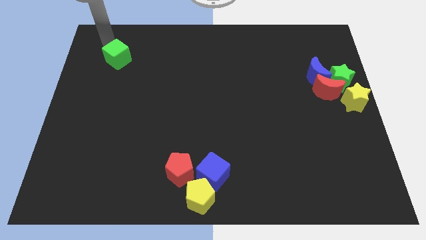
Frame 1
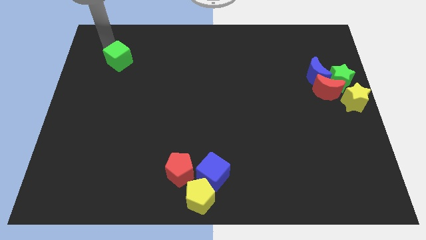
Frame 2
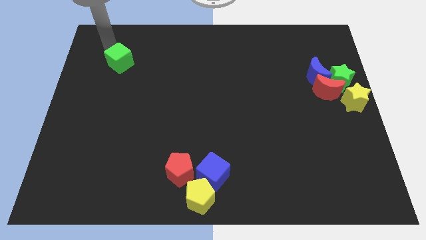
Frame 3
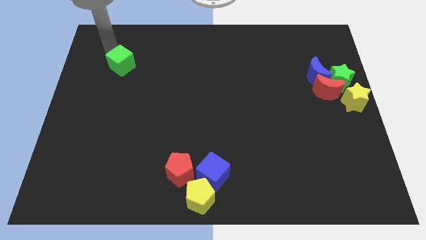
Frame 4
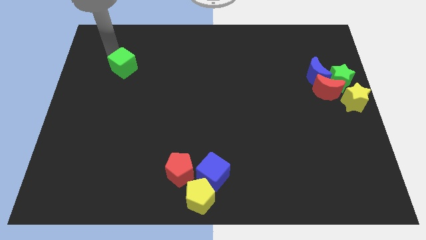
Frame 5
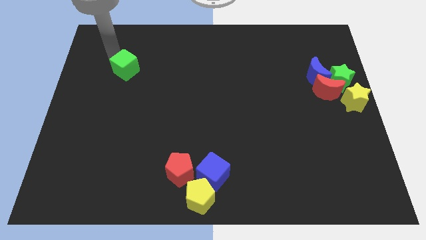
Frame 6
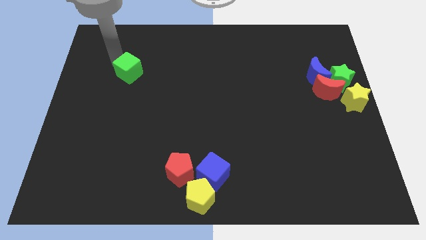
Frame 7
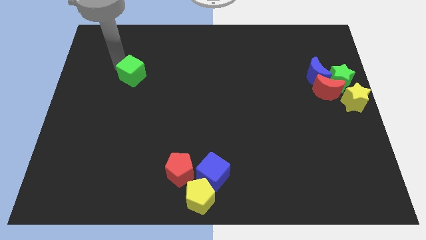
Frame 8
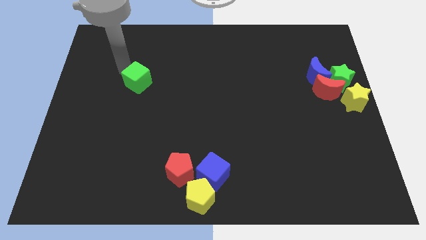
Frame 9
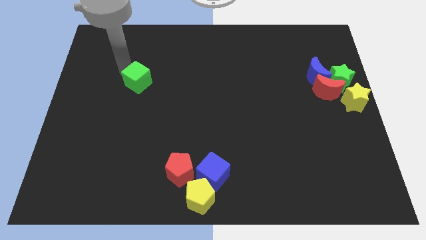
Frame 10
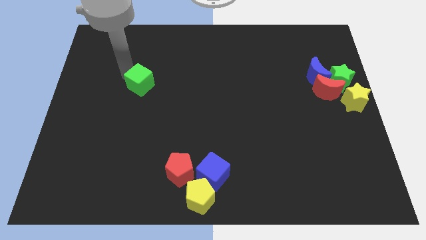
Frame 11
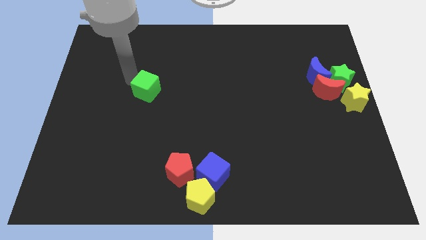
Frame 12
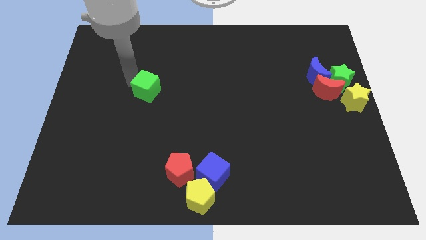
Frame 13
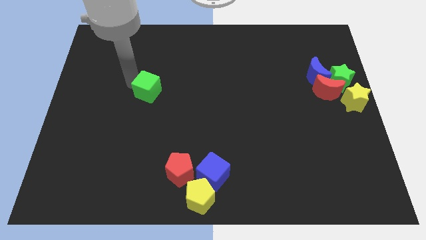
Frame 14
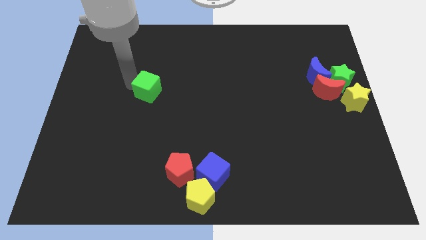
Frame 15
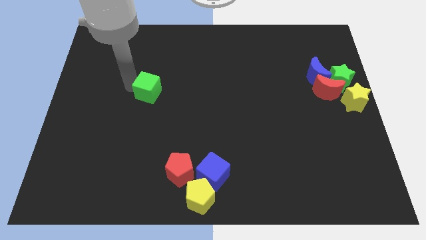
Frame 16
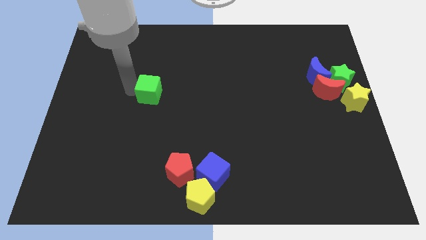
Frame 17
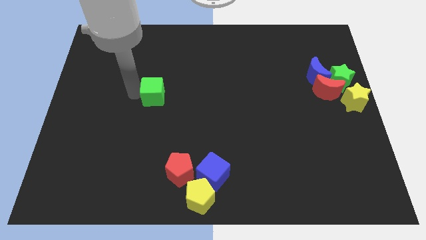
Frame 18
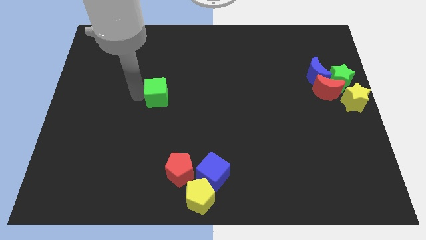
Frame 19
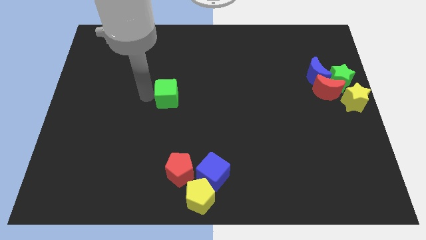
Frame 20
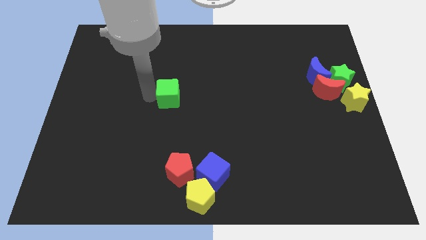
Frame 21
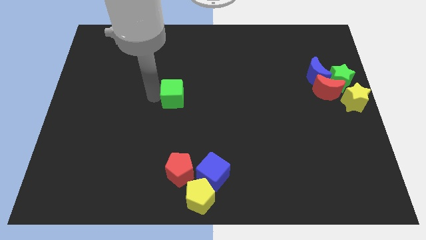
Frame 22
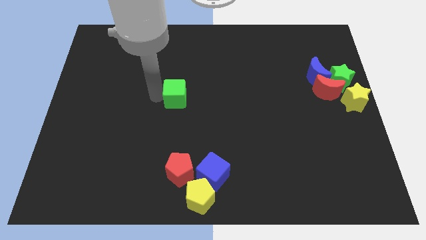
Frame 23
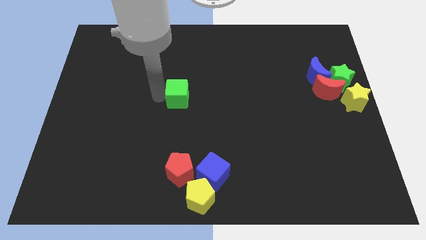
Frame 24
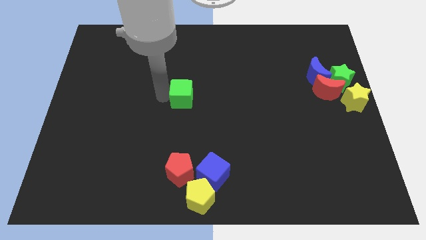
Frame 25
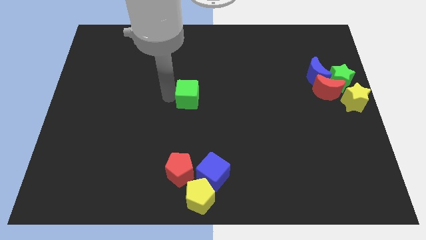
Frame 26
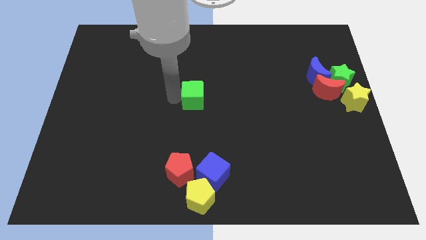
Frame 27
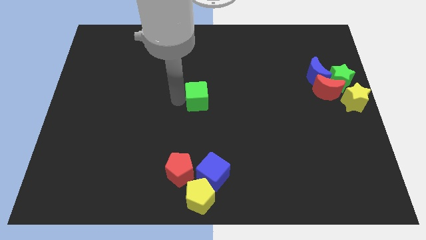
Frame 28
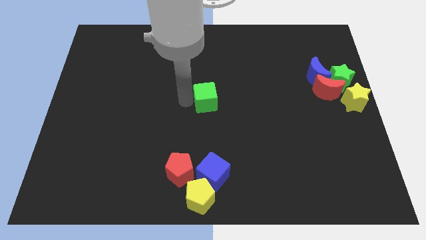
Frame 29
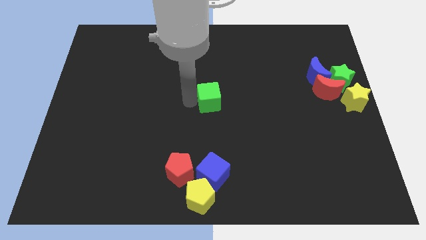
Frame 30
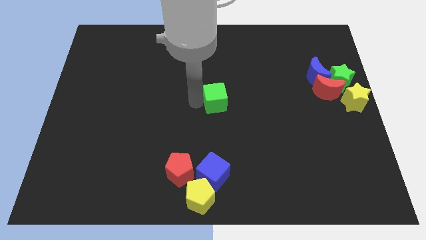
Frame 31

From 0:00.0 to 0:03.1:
push the green cube towards the center of the board

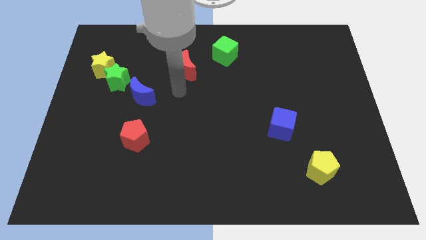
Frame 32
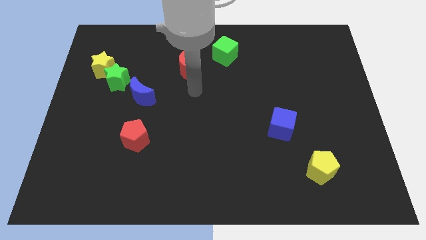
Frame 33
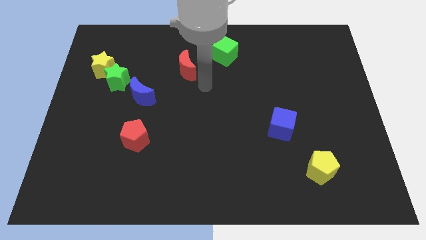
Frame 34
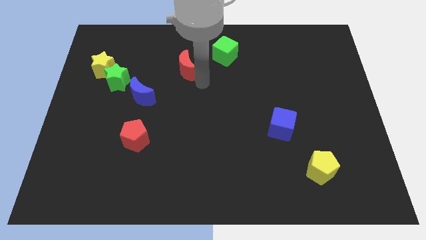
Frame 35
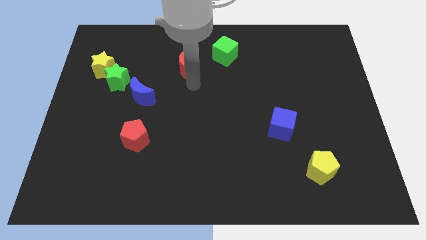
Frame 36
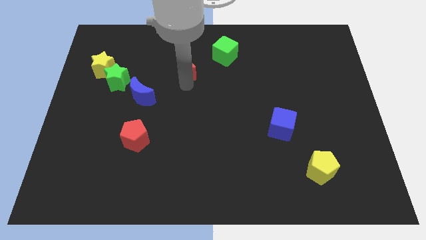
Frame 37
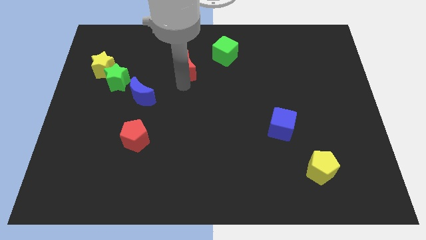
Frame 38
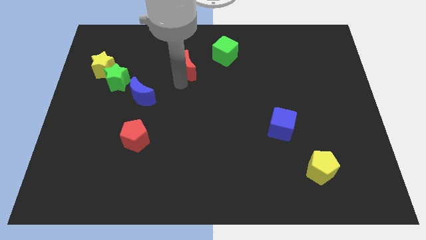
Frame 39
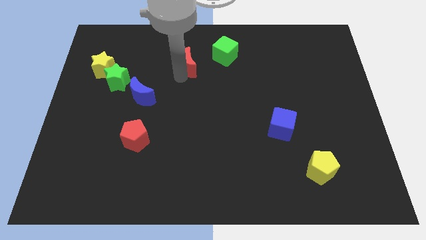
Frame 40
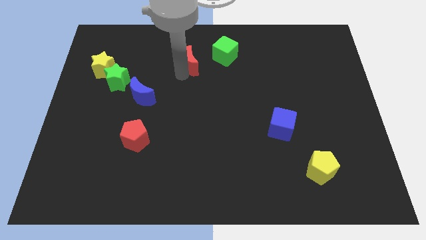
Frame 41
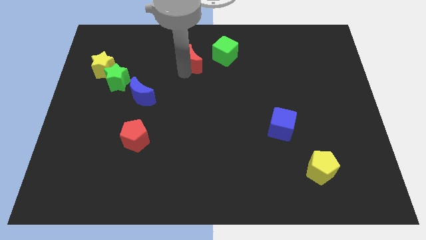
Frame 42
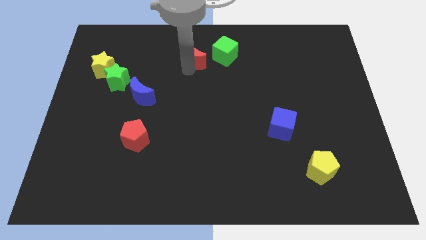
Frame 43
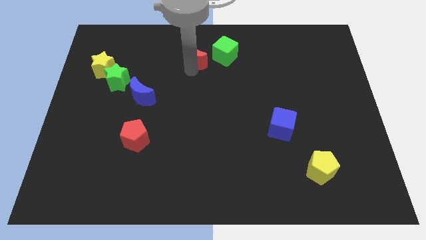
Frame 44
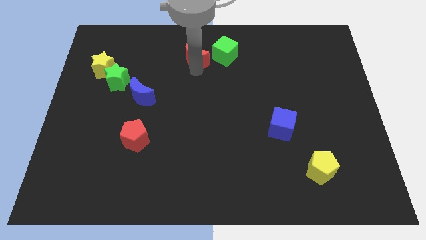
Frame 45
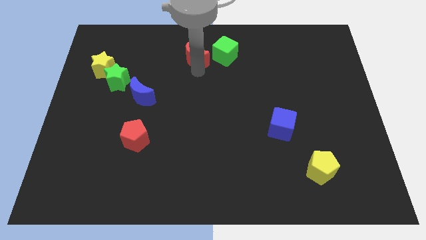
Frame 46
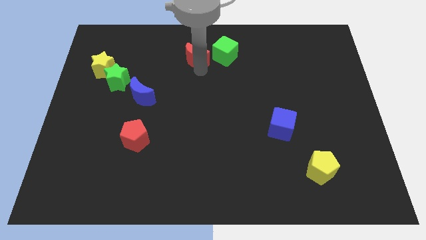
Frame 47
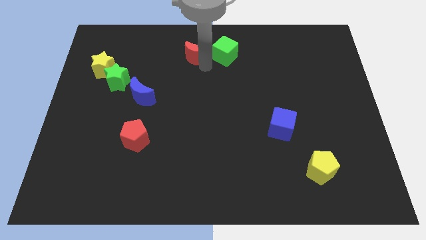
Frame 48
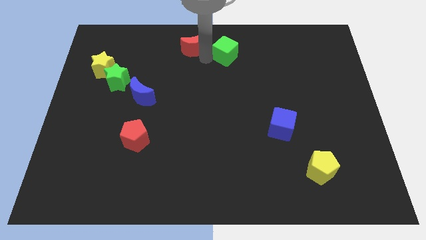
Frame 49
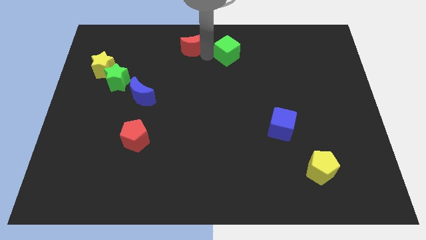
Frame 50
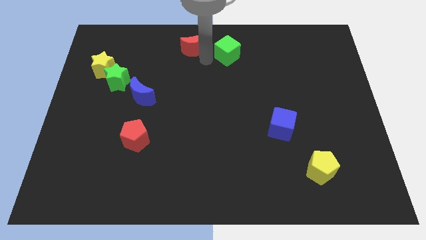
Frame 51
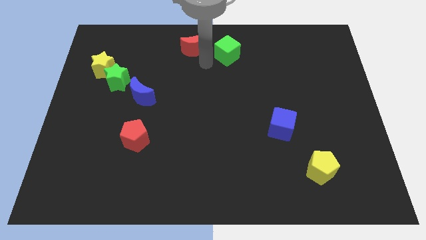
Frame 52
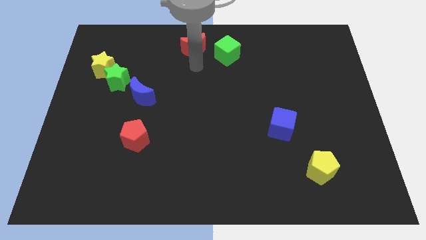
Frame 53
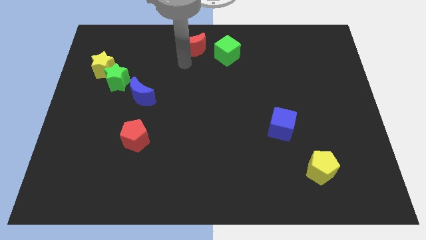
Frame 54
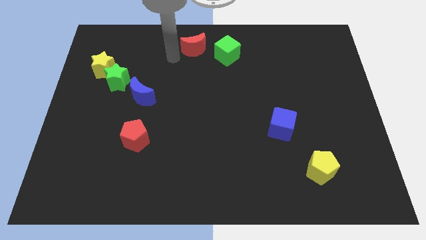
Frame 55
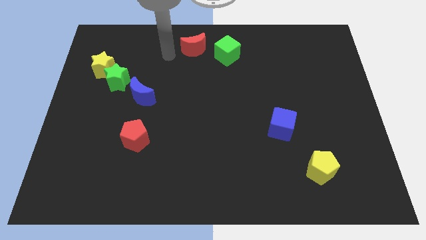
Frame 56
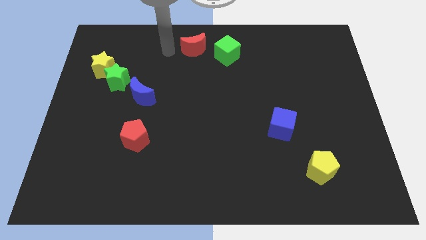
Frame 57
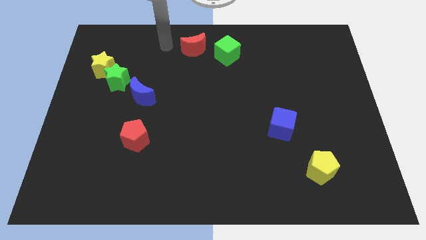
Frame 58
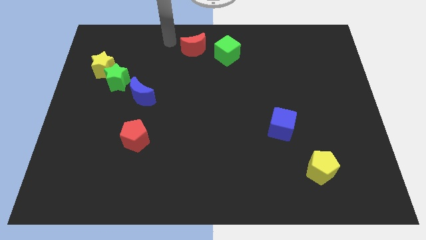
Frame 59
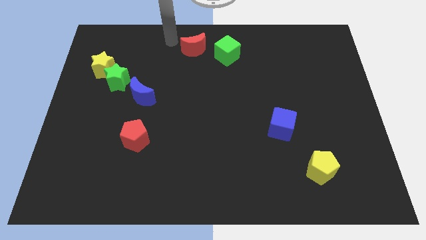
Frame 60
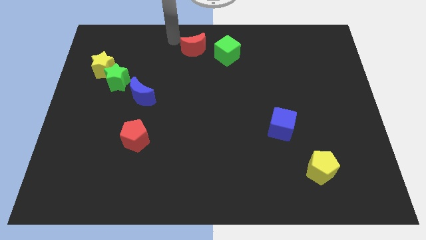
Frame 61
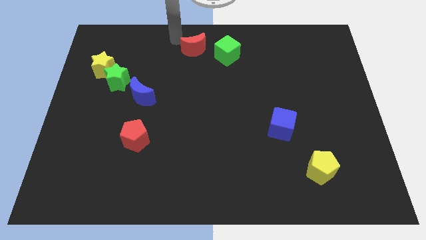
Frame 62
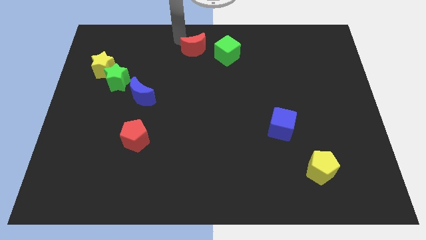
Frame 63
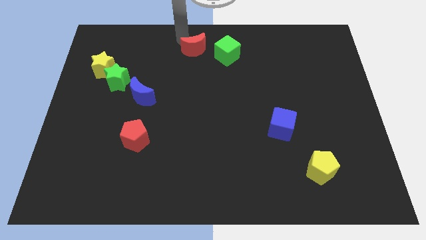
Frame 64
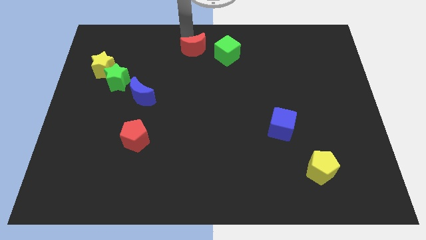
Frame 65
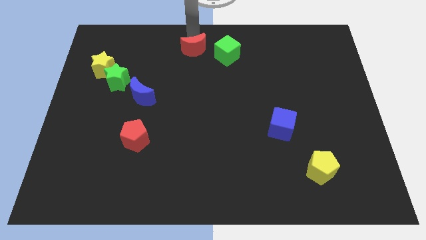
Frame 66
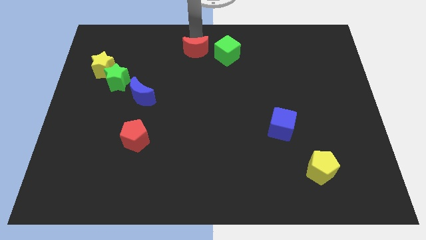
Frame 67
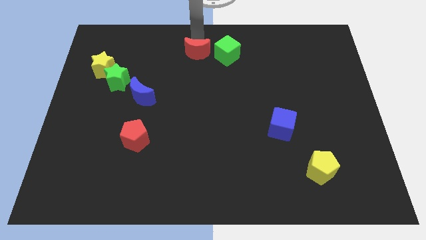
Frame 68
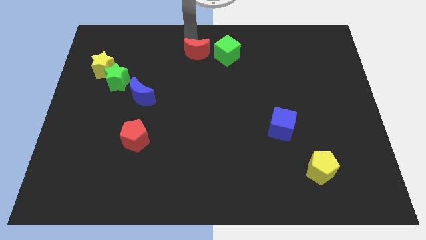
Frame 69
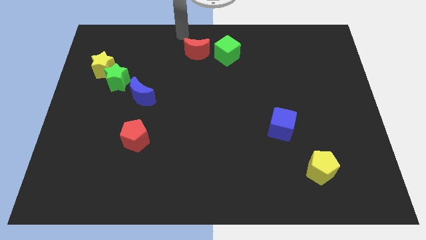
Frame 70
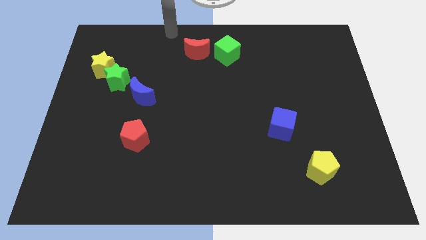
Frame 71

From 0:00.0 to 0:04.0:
push the red crescent close to the green cube

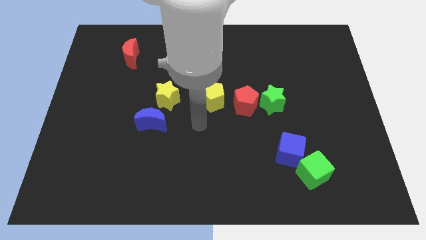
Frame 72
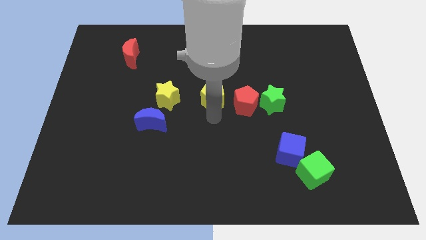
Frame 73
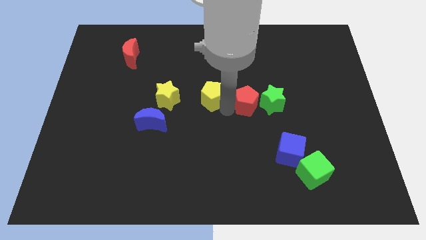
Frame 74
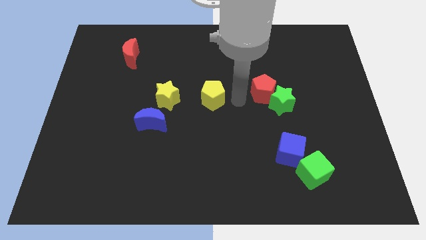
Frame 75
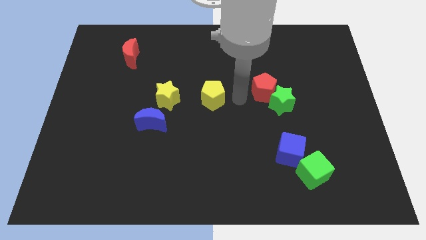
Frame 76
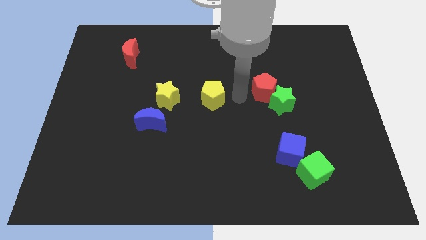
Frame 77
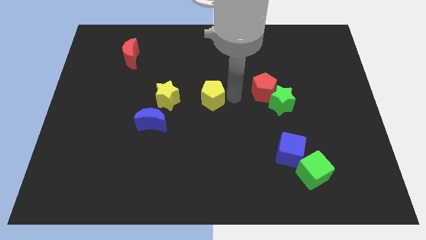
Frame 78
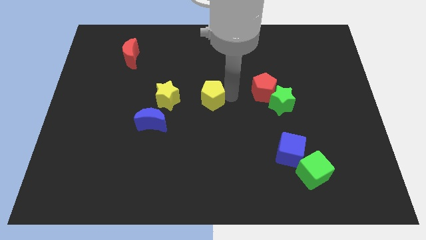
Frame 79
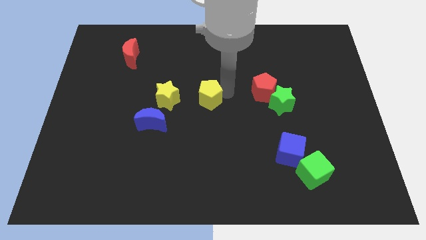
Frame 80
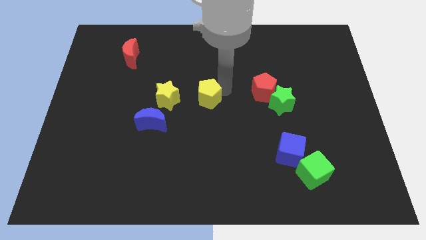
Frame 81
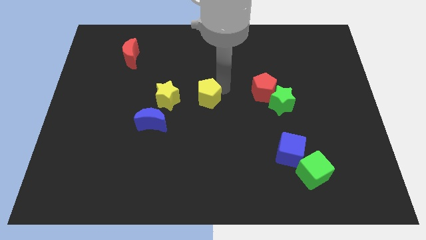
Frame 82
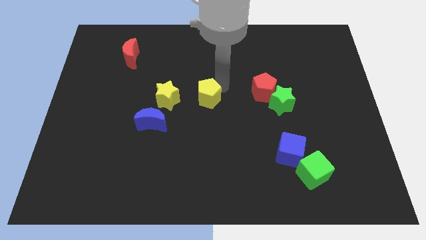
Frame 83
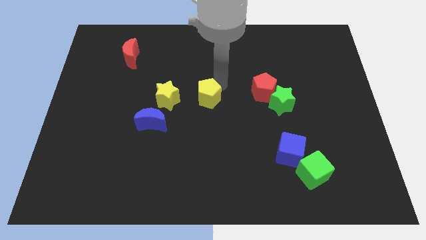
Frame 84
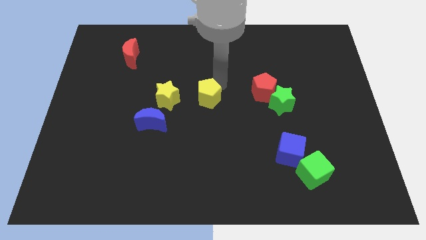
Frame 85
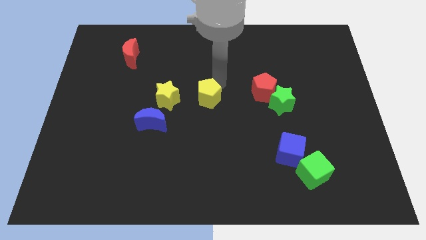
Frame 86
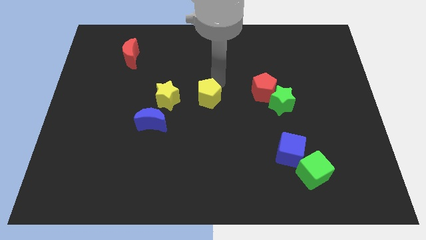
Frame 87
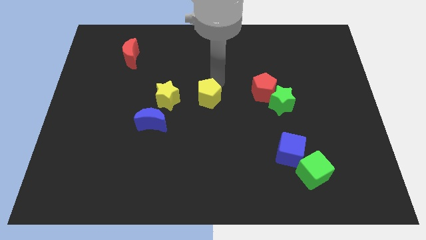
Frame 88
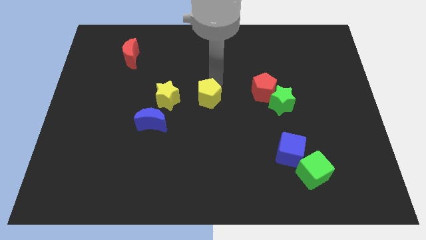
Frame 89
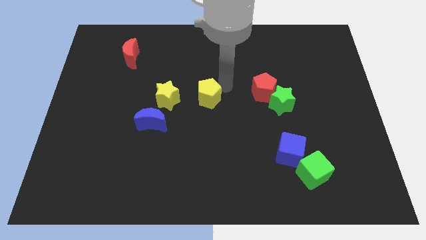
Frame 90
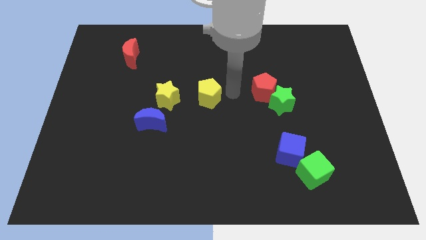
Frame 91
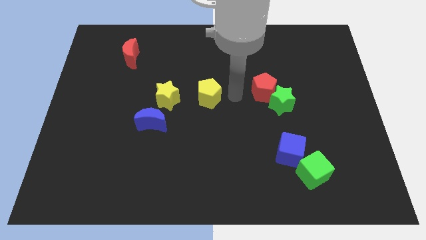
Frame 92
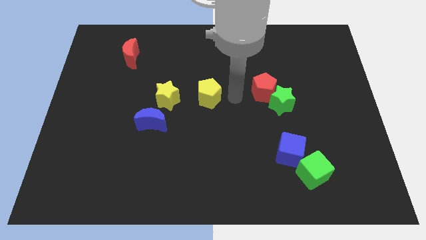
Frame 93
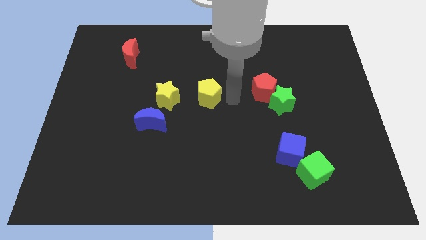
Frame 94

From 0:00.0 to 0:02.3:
separate the yellow and red pentagons
